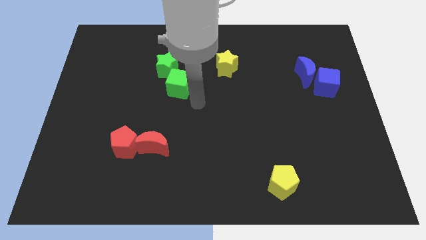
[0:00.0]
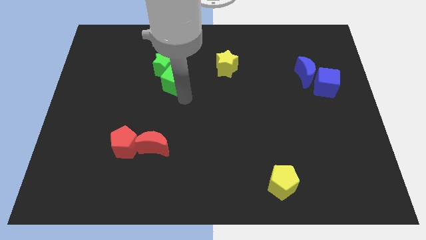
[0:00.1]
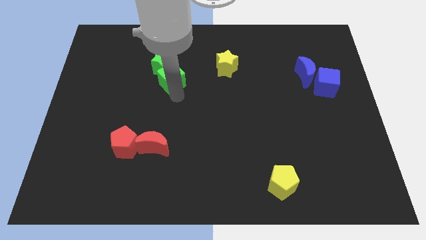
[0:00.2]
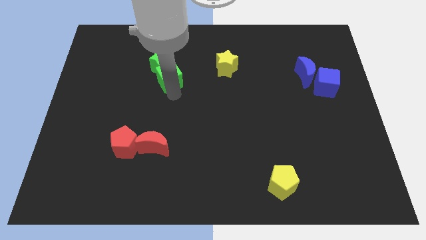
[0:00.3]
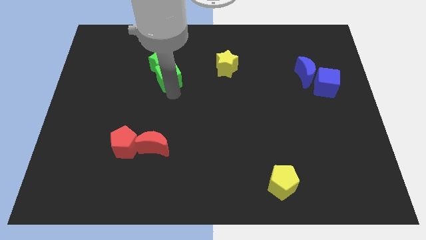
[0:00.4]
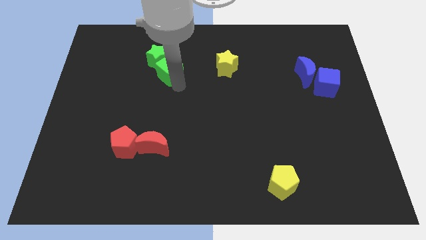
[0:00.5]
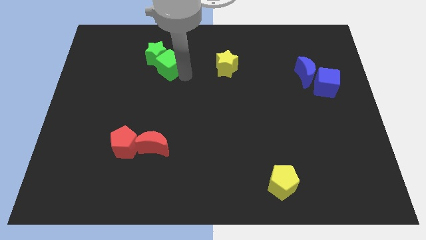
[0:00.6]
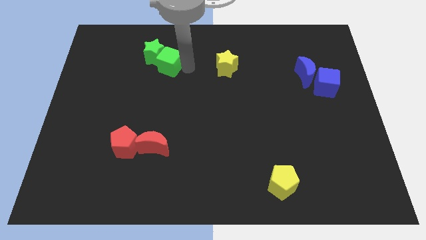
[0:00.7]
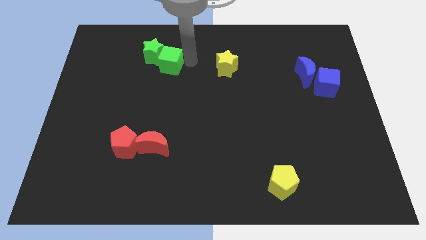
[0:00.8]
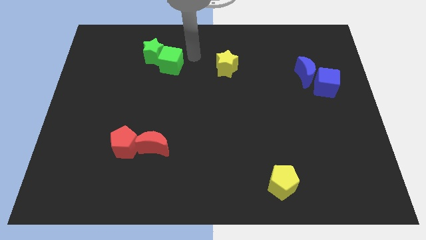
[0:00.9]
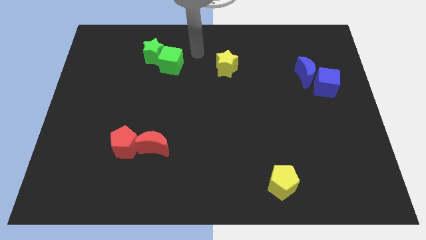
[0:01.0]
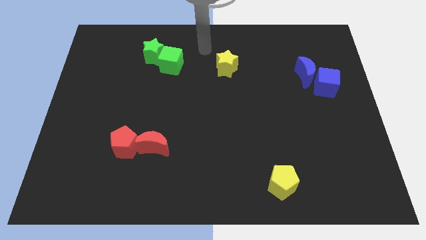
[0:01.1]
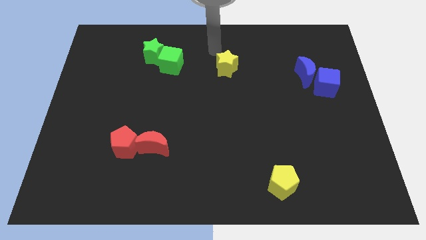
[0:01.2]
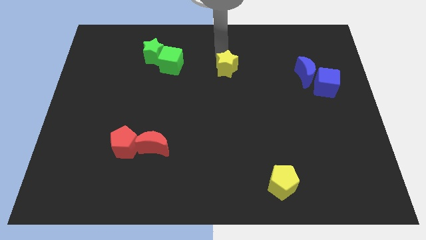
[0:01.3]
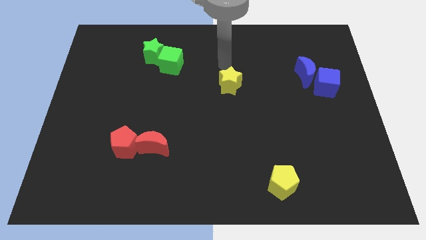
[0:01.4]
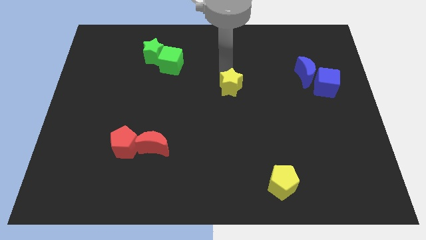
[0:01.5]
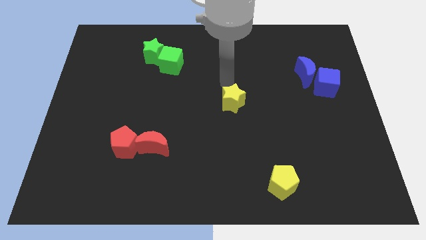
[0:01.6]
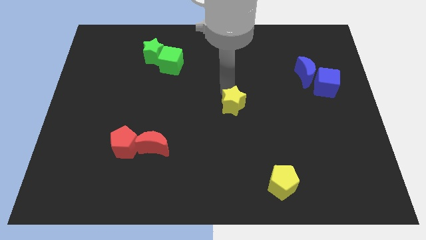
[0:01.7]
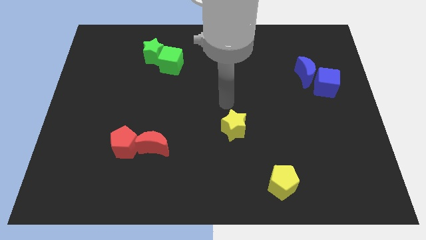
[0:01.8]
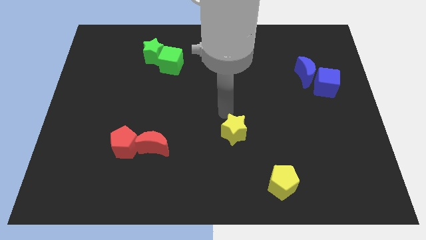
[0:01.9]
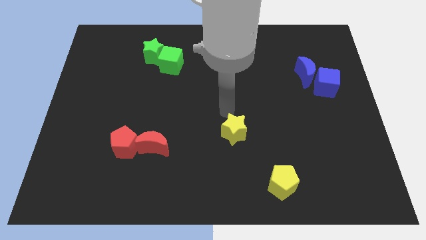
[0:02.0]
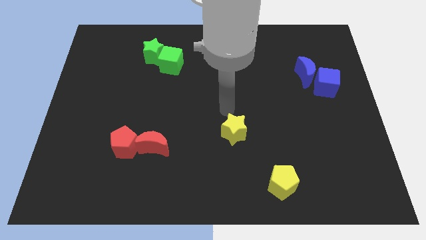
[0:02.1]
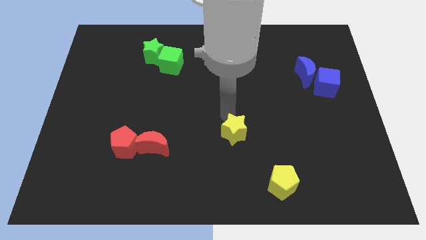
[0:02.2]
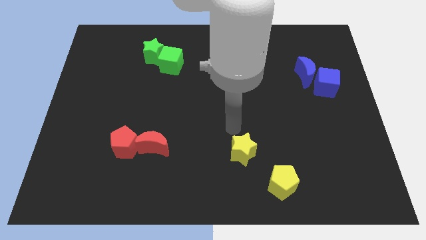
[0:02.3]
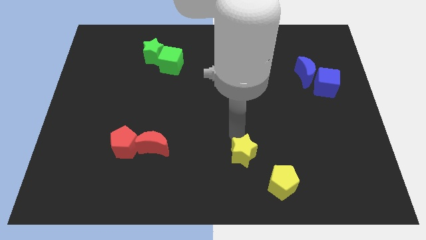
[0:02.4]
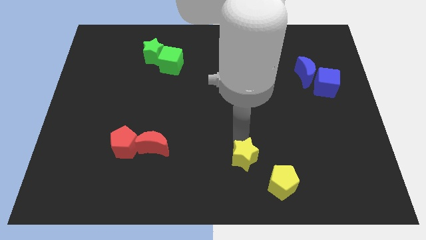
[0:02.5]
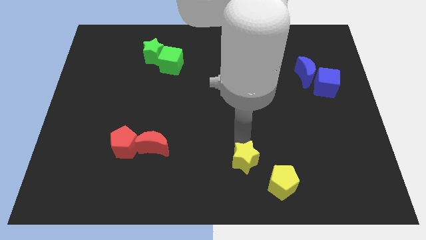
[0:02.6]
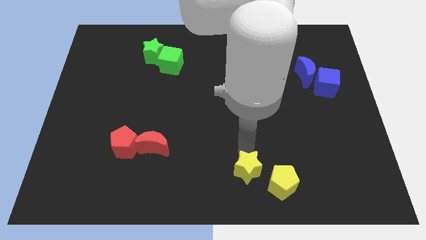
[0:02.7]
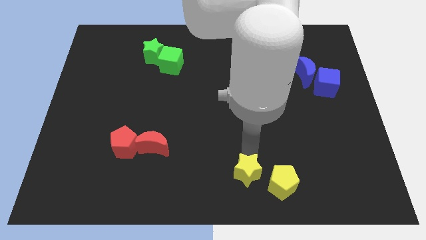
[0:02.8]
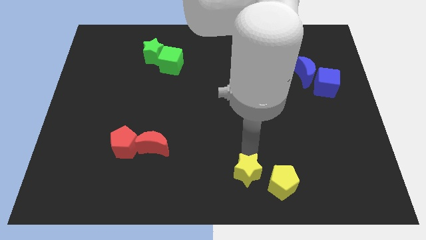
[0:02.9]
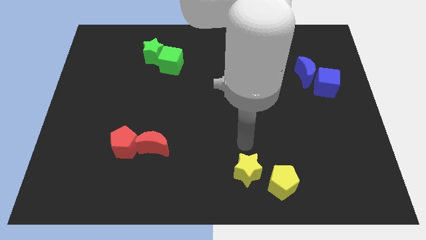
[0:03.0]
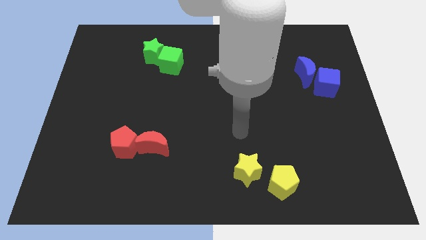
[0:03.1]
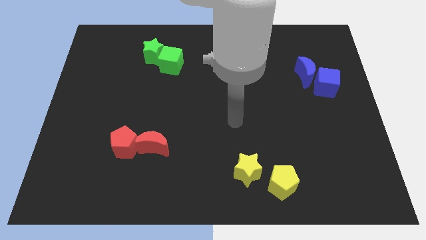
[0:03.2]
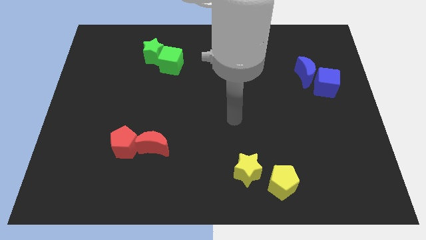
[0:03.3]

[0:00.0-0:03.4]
place yellow star near to yellow pentagon

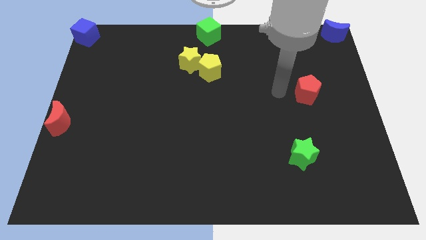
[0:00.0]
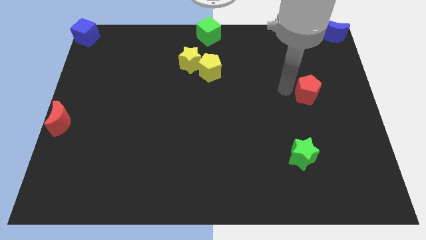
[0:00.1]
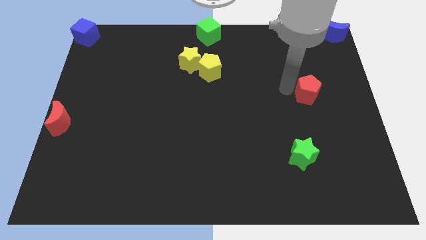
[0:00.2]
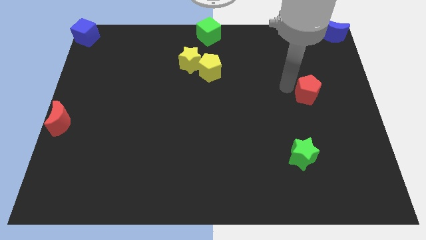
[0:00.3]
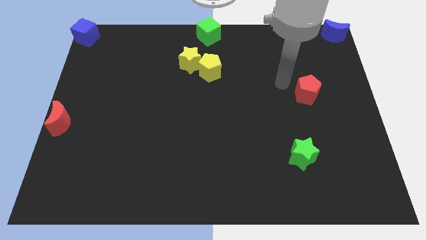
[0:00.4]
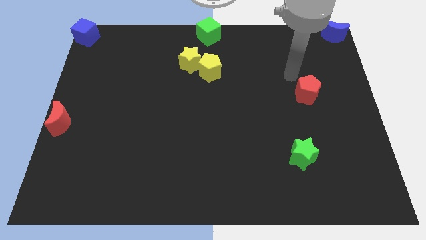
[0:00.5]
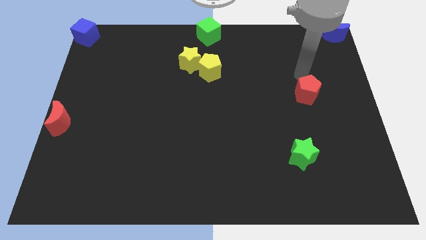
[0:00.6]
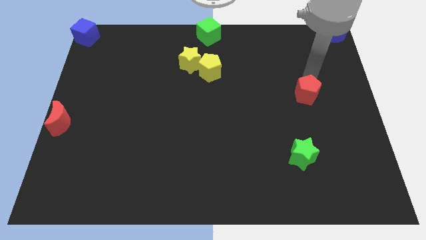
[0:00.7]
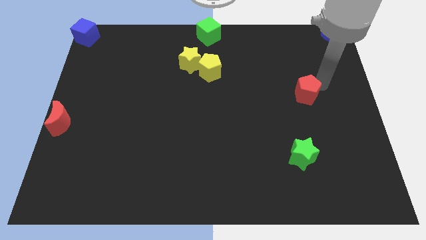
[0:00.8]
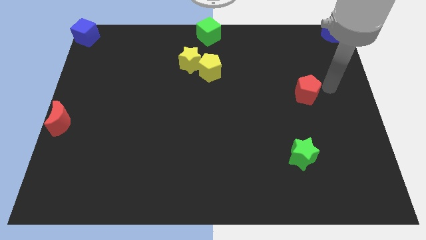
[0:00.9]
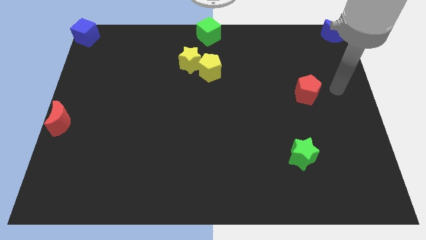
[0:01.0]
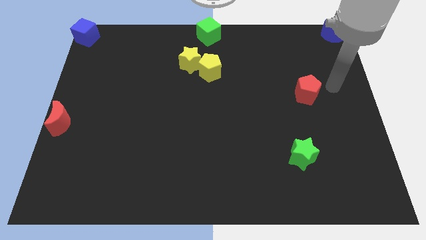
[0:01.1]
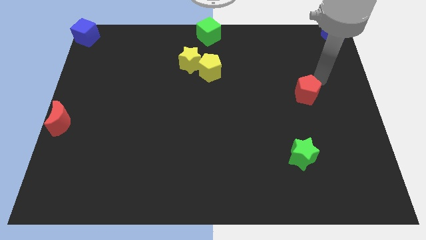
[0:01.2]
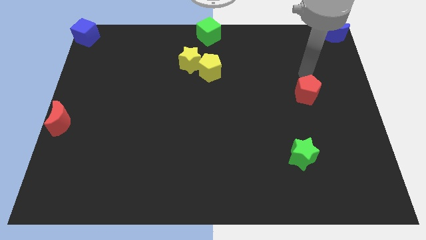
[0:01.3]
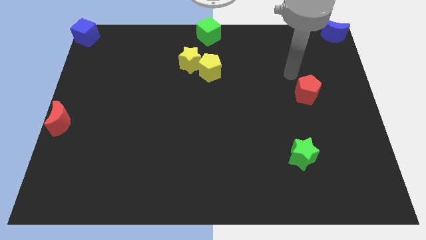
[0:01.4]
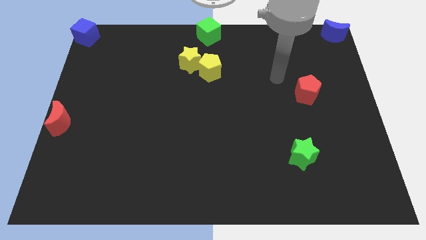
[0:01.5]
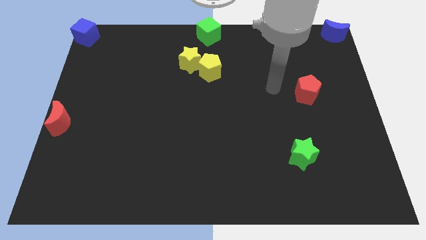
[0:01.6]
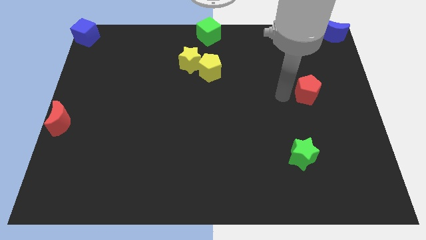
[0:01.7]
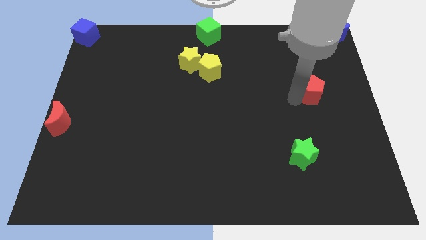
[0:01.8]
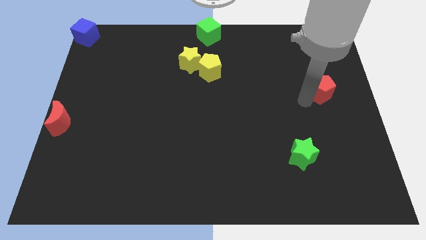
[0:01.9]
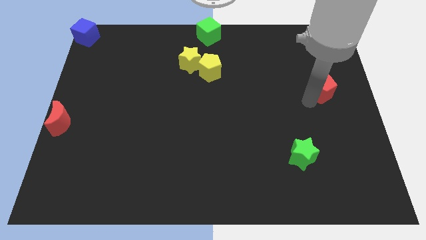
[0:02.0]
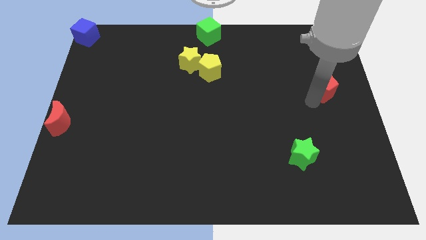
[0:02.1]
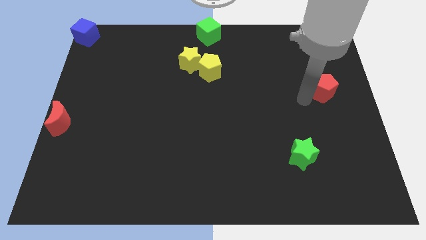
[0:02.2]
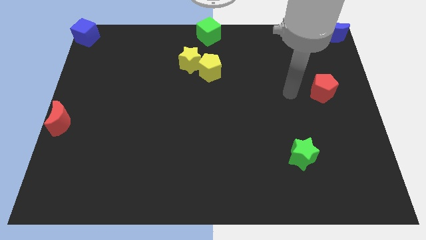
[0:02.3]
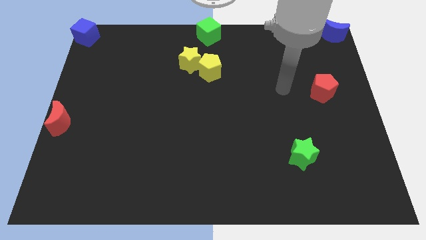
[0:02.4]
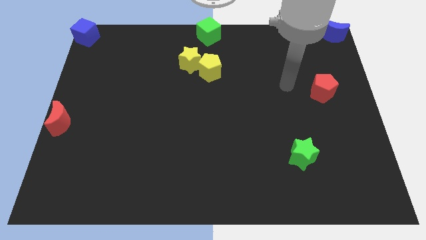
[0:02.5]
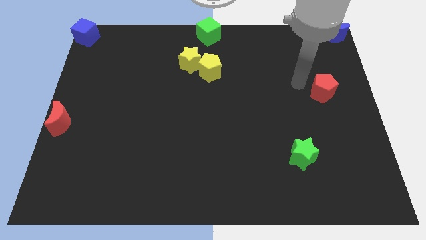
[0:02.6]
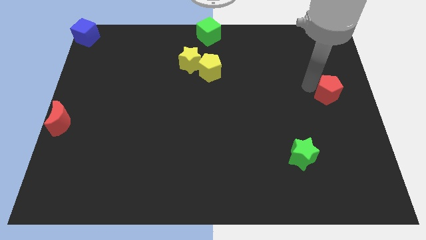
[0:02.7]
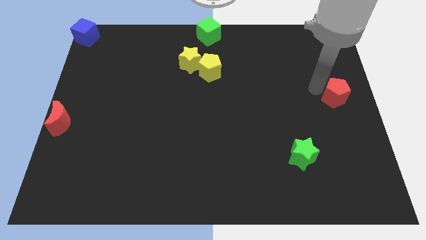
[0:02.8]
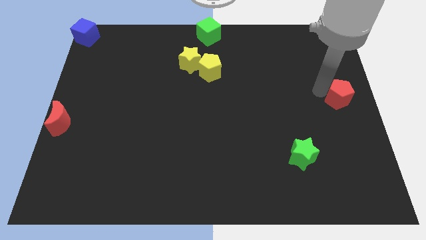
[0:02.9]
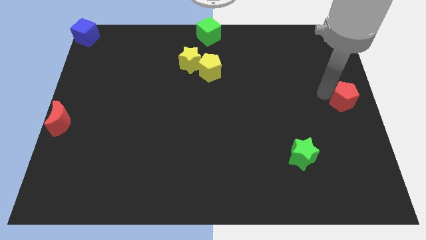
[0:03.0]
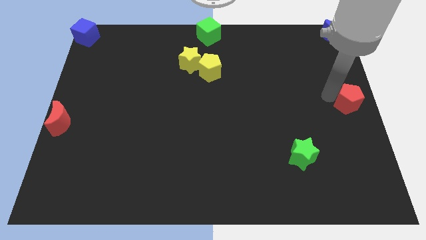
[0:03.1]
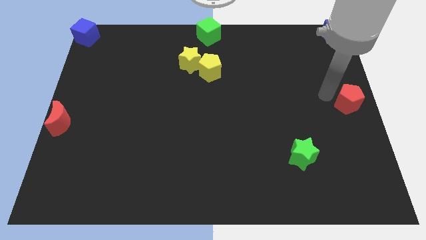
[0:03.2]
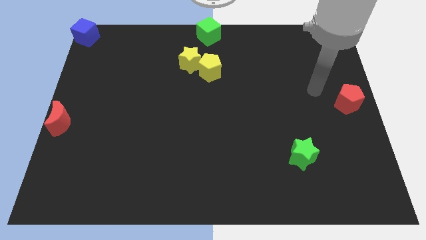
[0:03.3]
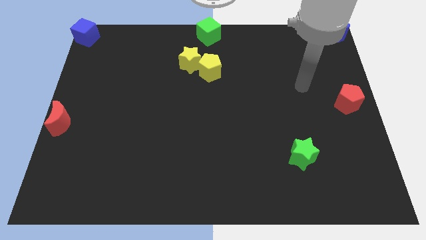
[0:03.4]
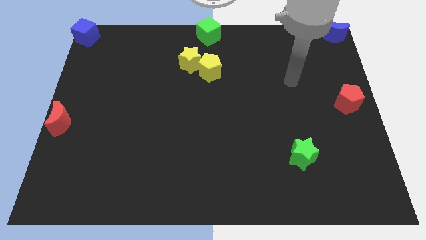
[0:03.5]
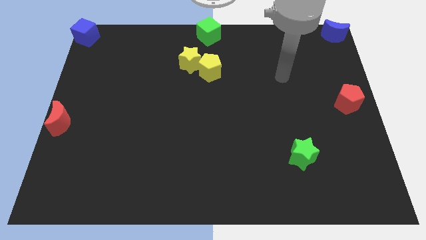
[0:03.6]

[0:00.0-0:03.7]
place the red pentagon at the center right

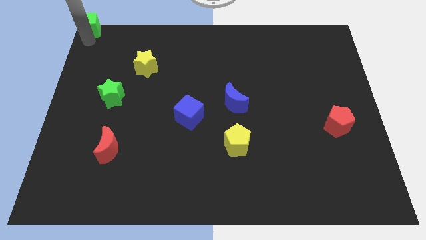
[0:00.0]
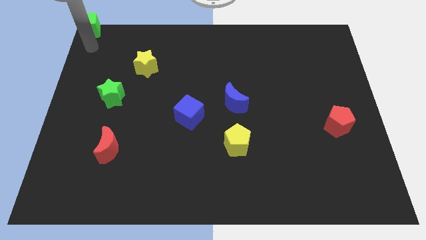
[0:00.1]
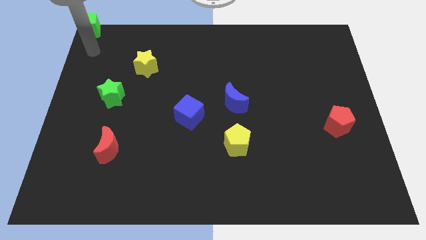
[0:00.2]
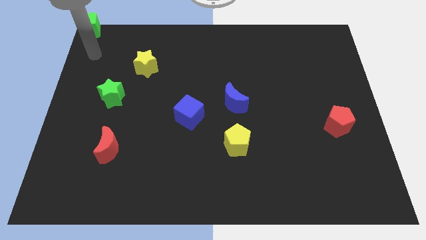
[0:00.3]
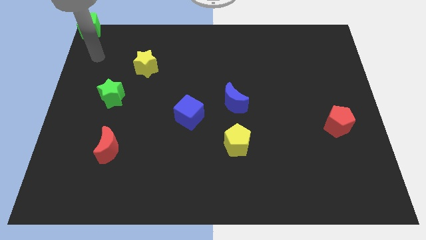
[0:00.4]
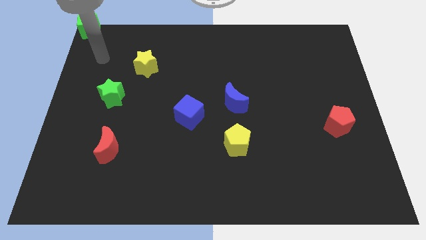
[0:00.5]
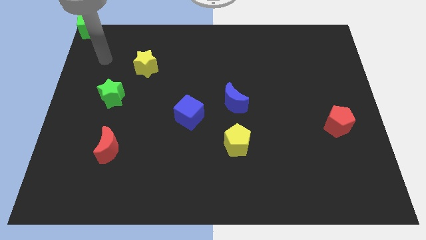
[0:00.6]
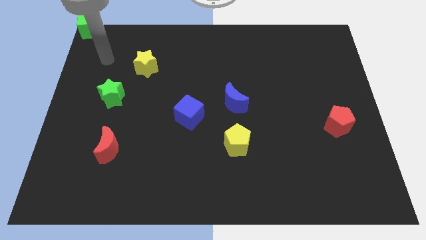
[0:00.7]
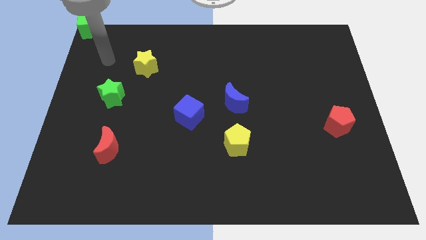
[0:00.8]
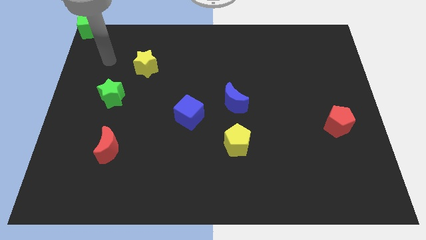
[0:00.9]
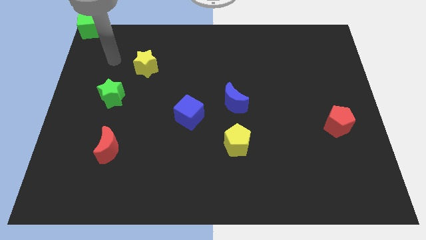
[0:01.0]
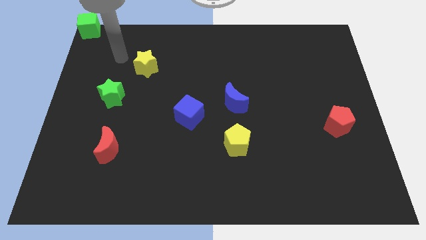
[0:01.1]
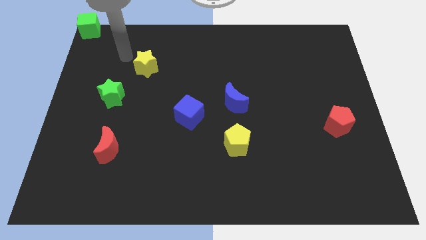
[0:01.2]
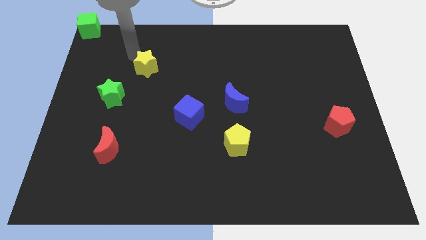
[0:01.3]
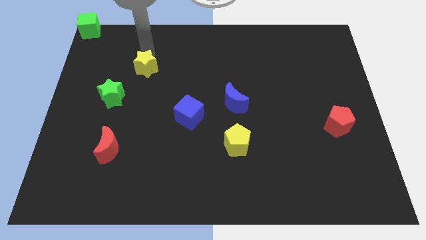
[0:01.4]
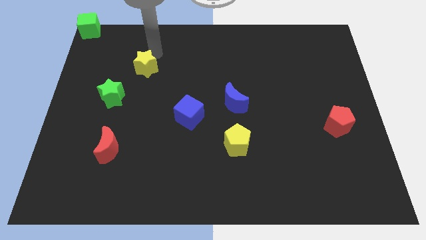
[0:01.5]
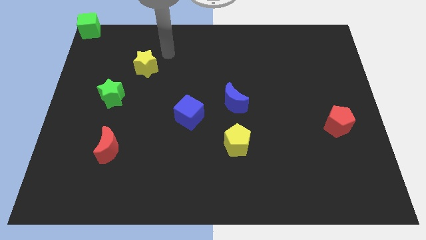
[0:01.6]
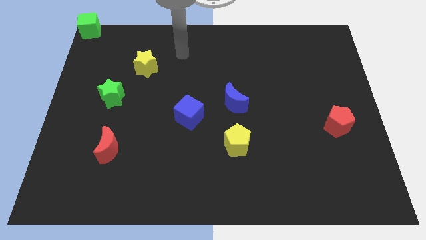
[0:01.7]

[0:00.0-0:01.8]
move the arm away from the green cube
